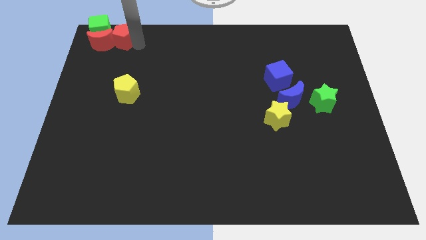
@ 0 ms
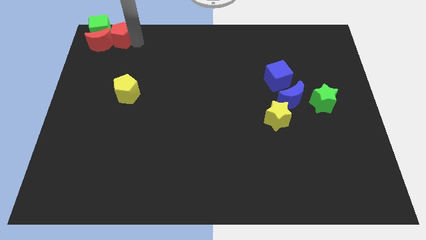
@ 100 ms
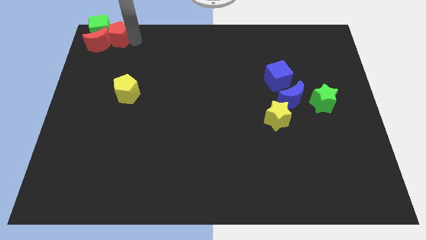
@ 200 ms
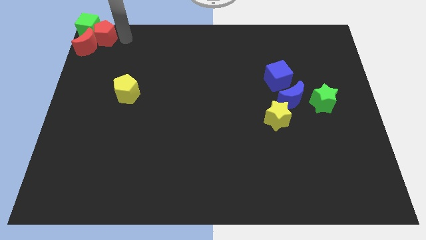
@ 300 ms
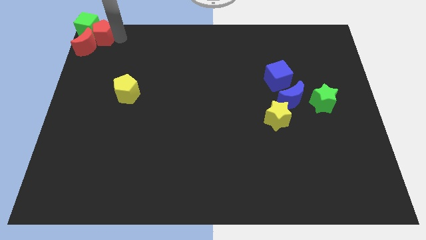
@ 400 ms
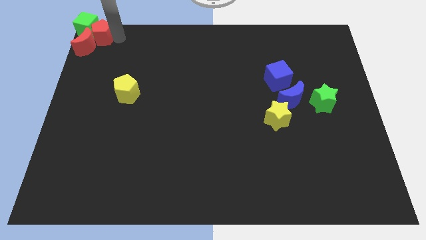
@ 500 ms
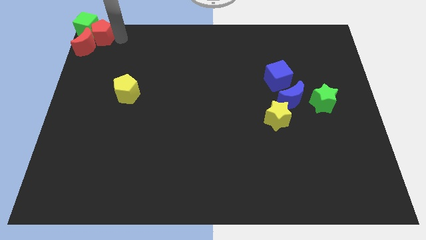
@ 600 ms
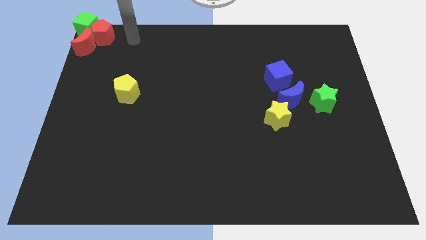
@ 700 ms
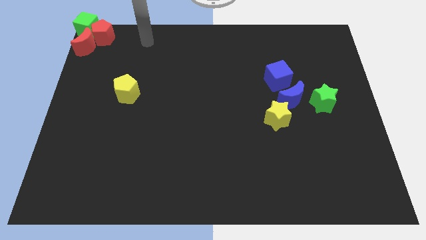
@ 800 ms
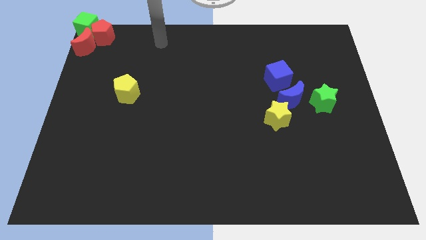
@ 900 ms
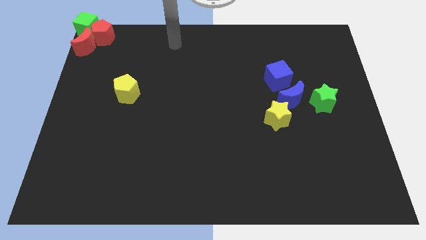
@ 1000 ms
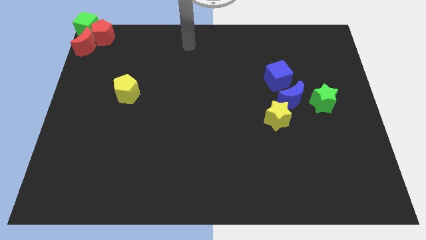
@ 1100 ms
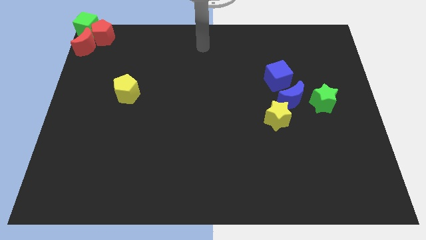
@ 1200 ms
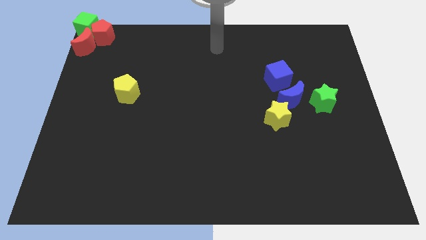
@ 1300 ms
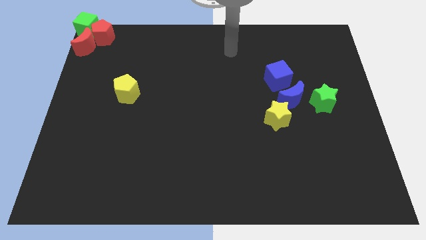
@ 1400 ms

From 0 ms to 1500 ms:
push the red blocks and green cube to the top left corner

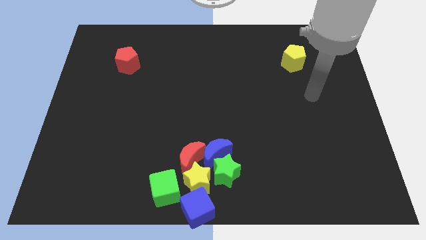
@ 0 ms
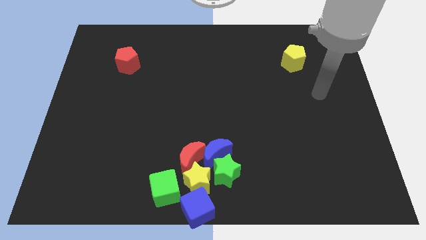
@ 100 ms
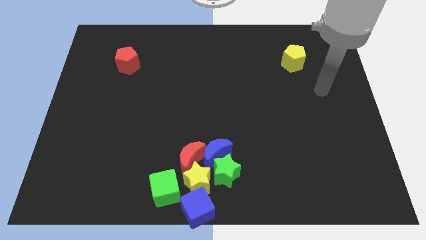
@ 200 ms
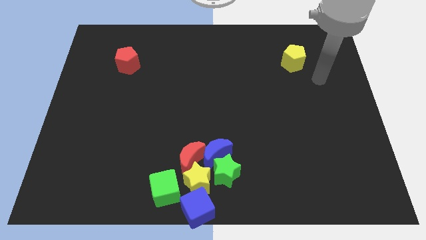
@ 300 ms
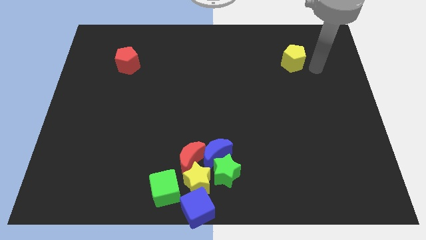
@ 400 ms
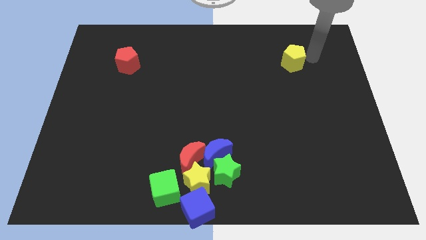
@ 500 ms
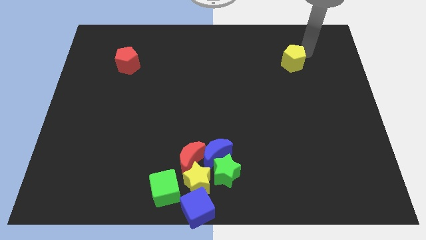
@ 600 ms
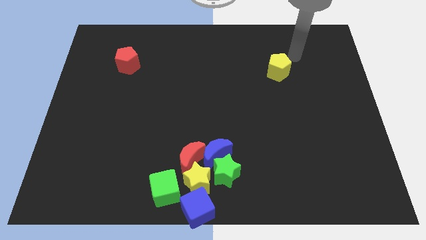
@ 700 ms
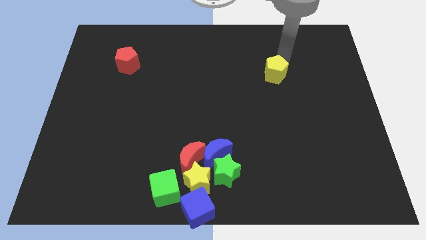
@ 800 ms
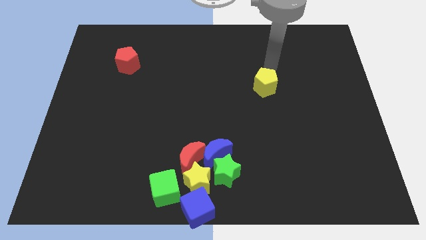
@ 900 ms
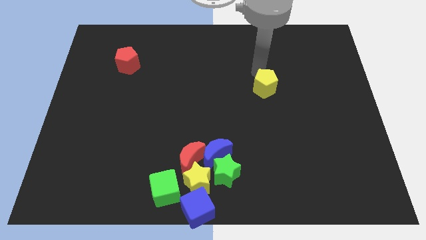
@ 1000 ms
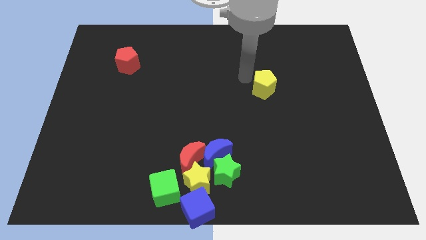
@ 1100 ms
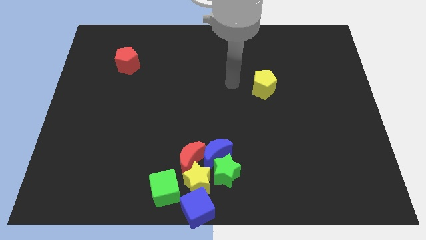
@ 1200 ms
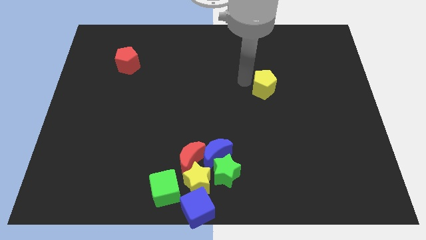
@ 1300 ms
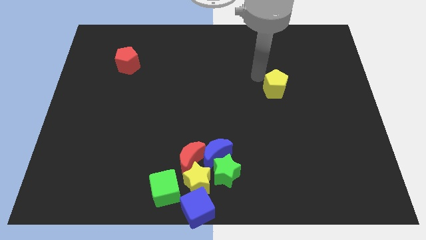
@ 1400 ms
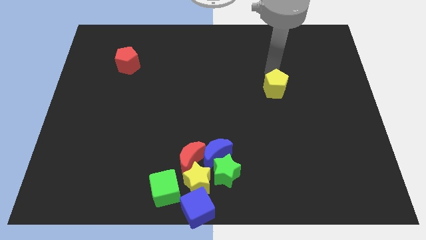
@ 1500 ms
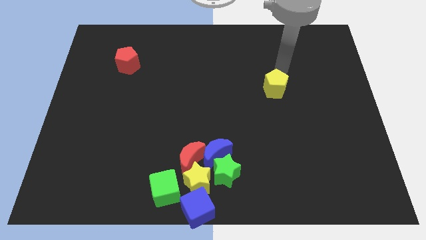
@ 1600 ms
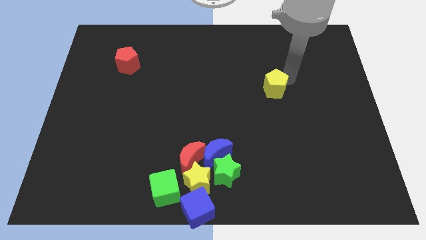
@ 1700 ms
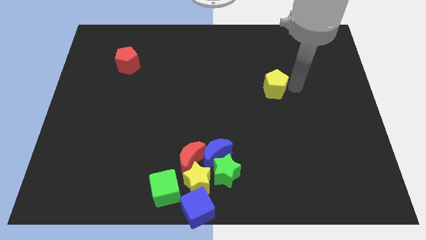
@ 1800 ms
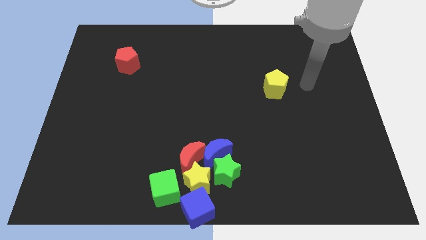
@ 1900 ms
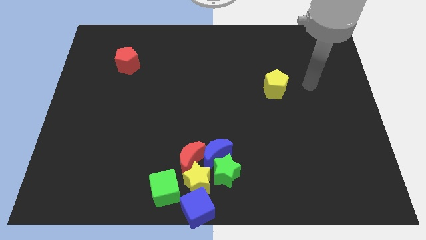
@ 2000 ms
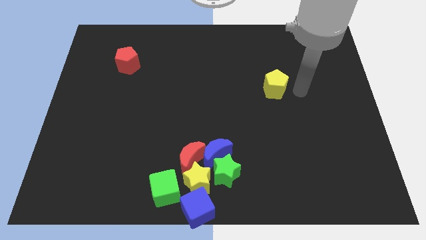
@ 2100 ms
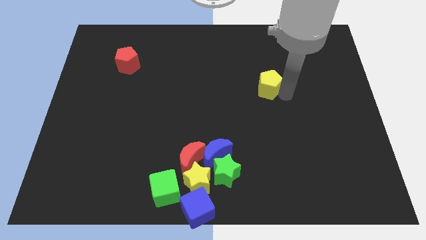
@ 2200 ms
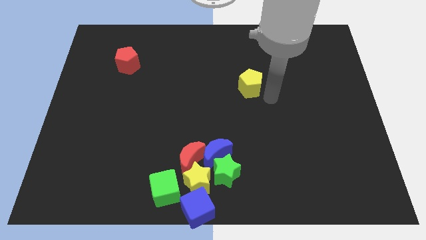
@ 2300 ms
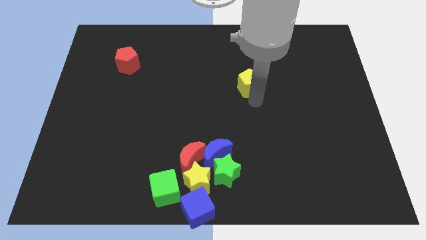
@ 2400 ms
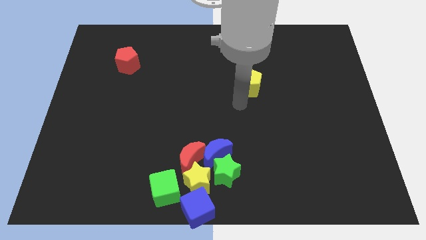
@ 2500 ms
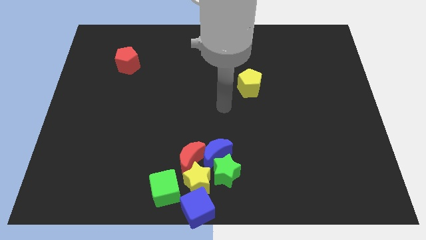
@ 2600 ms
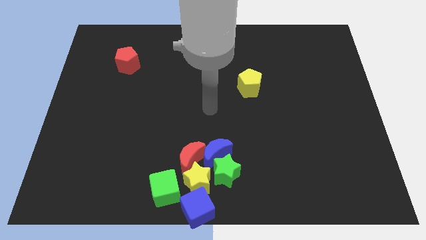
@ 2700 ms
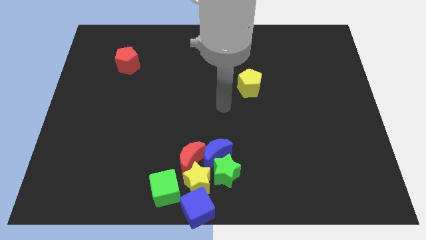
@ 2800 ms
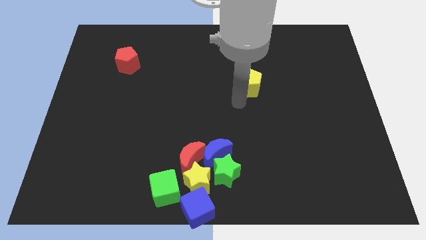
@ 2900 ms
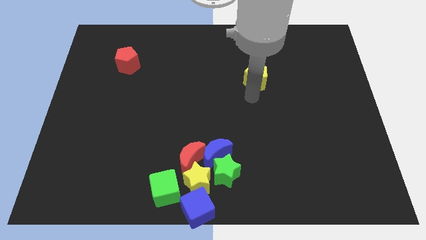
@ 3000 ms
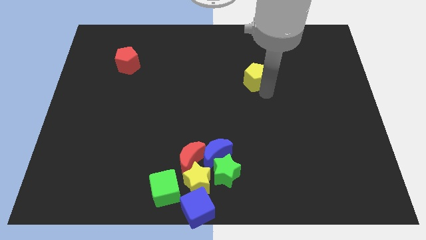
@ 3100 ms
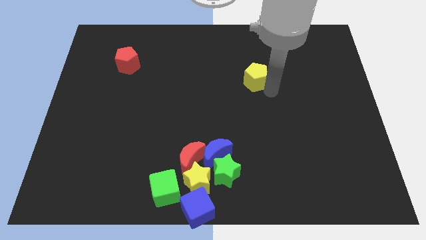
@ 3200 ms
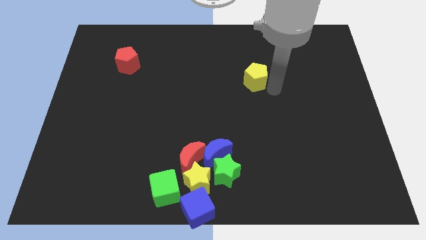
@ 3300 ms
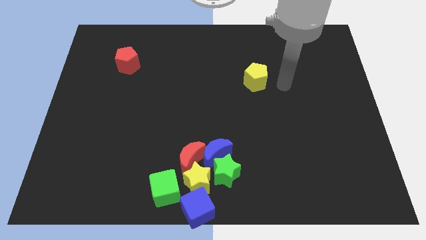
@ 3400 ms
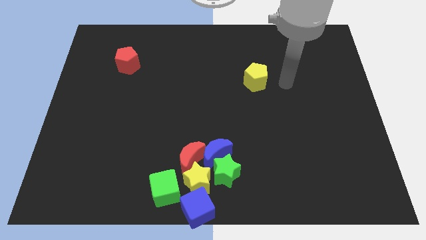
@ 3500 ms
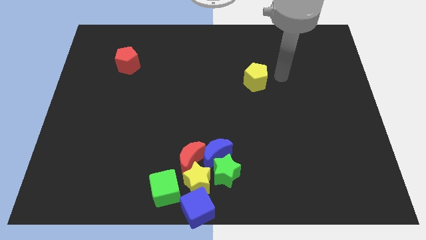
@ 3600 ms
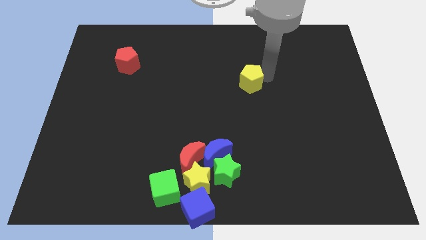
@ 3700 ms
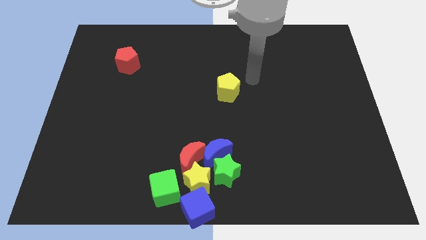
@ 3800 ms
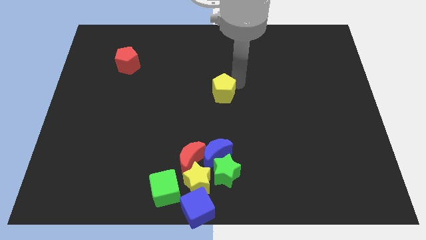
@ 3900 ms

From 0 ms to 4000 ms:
move the yellow pentagon to the center of the board

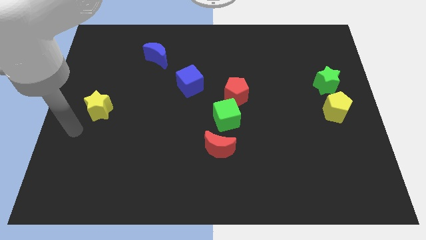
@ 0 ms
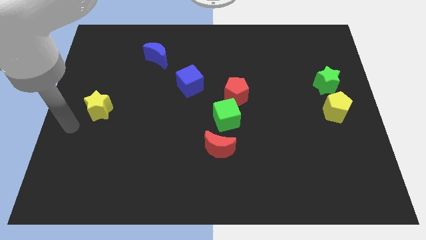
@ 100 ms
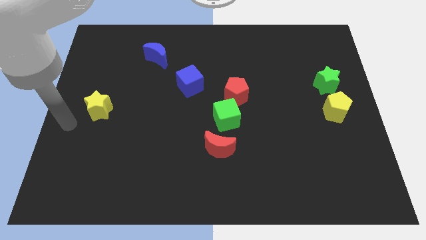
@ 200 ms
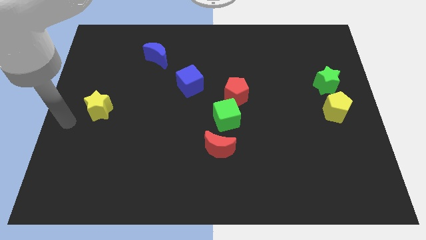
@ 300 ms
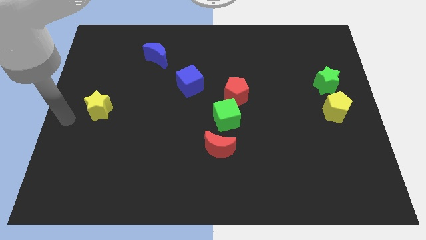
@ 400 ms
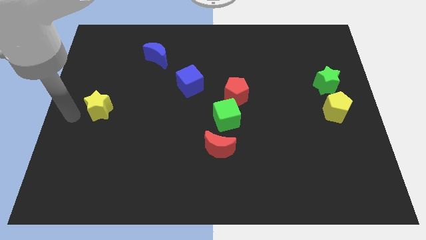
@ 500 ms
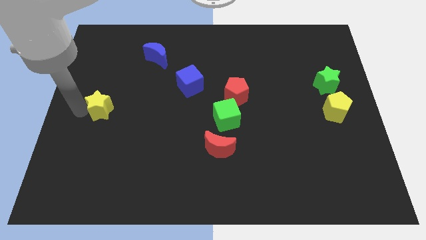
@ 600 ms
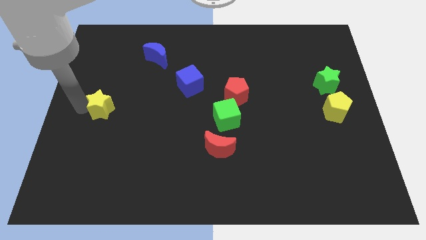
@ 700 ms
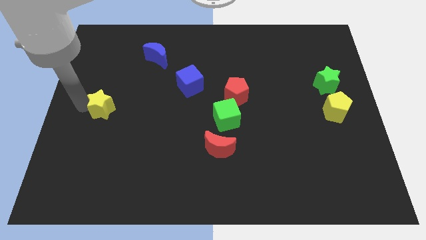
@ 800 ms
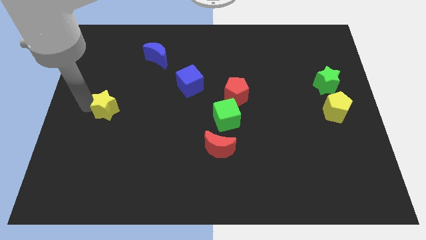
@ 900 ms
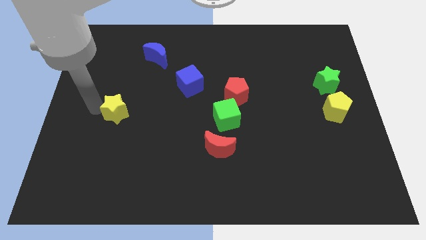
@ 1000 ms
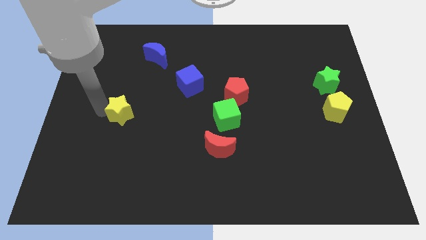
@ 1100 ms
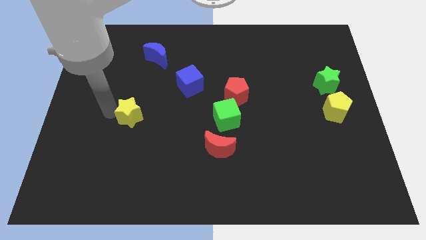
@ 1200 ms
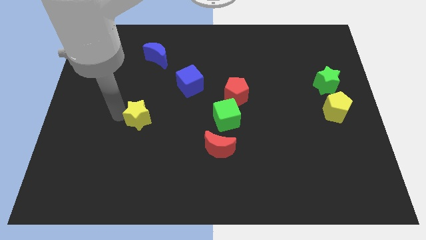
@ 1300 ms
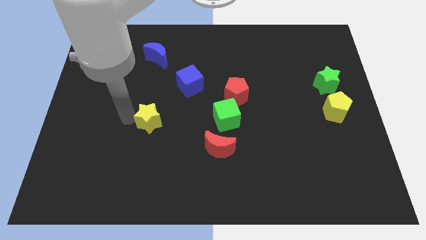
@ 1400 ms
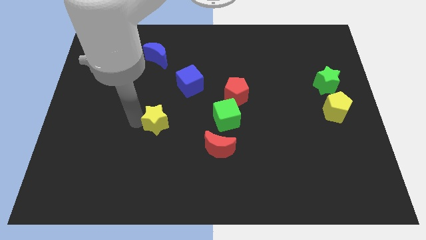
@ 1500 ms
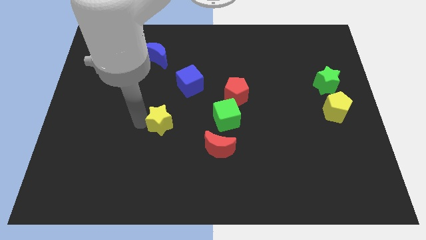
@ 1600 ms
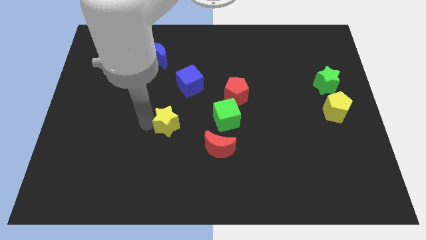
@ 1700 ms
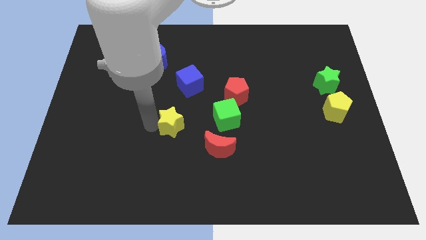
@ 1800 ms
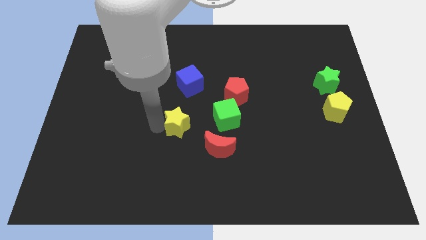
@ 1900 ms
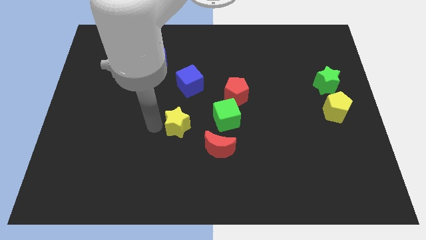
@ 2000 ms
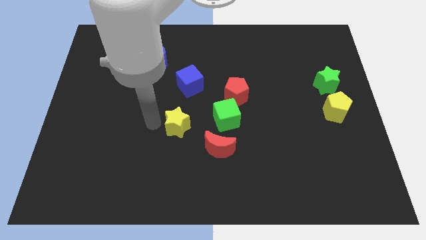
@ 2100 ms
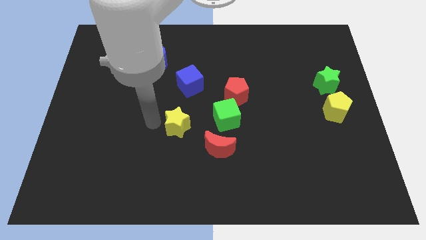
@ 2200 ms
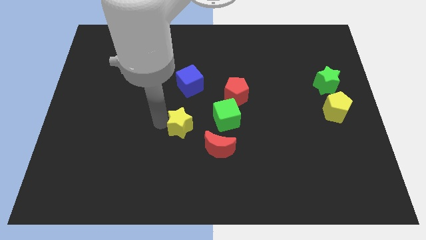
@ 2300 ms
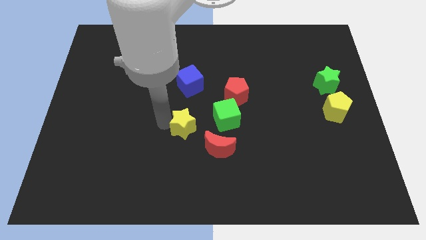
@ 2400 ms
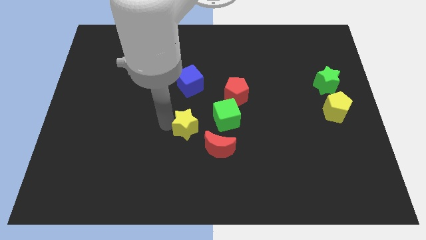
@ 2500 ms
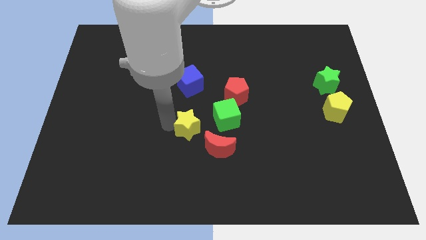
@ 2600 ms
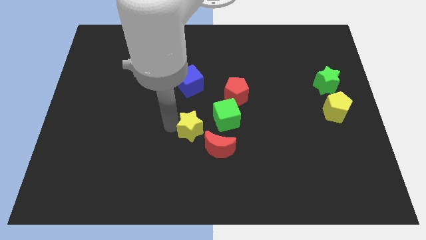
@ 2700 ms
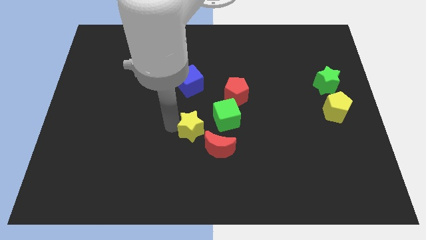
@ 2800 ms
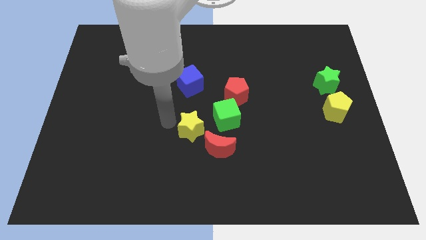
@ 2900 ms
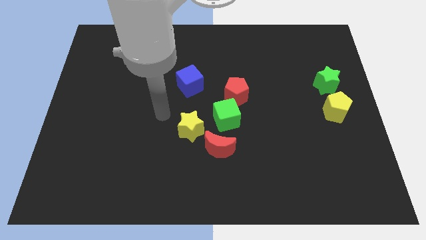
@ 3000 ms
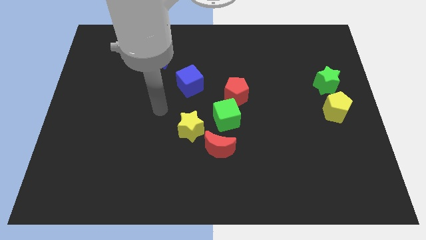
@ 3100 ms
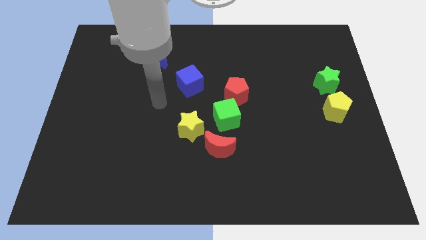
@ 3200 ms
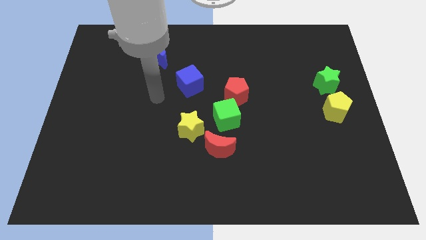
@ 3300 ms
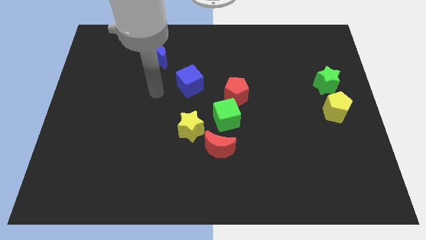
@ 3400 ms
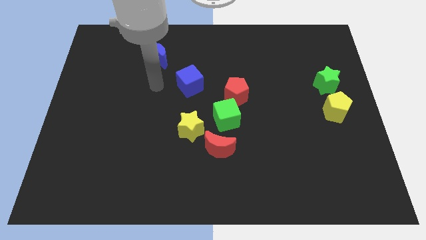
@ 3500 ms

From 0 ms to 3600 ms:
place the yellow star near the red crescent
